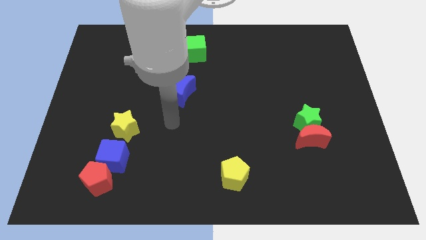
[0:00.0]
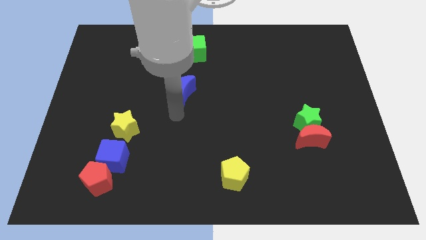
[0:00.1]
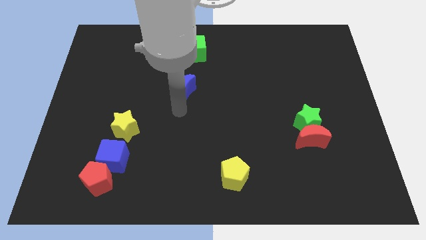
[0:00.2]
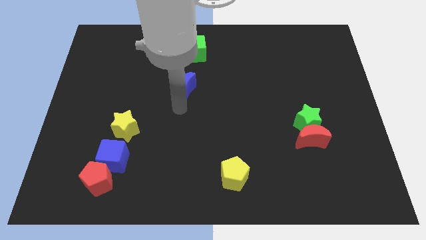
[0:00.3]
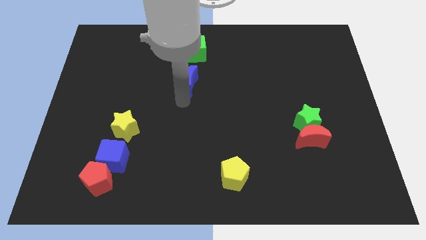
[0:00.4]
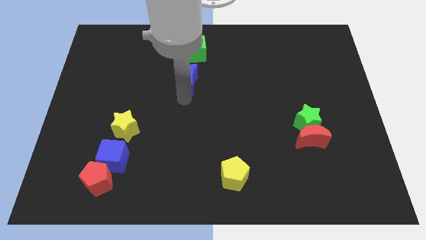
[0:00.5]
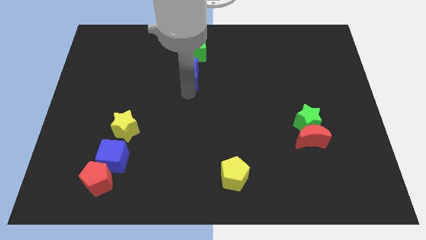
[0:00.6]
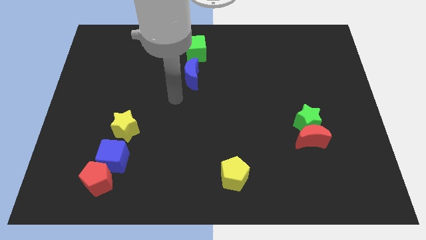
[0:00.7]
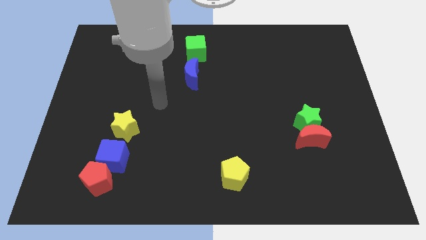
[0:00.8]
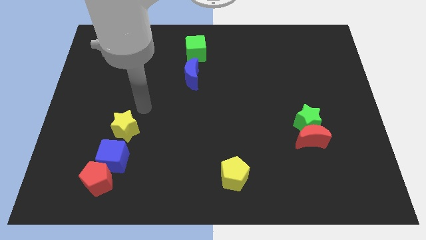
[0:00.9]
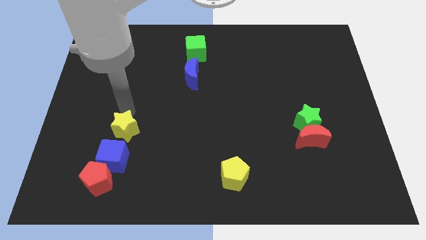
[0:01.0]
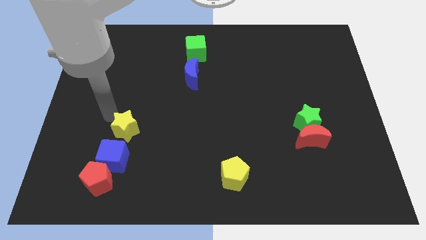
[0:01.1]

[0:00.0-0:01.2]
move the blue crescent into the green cube

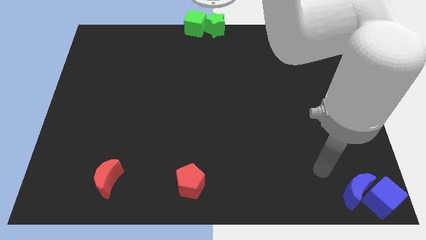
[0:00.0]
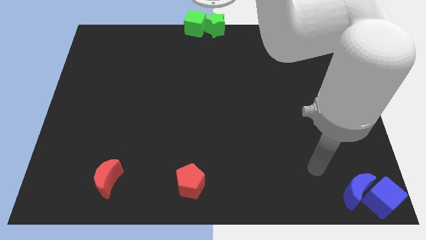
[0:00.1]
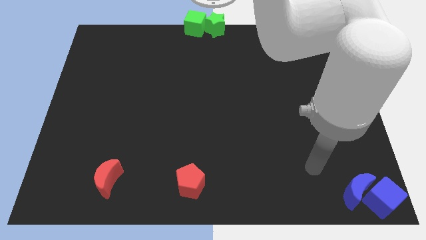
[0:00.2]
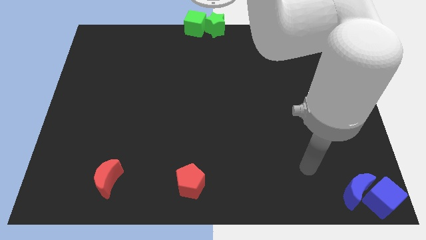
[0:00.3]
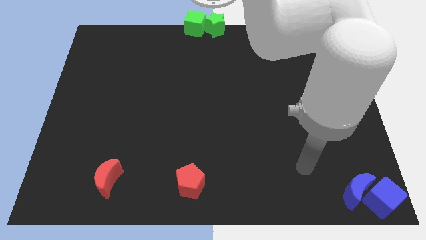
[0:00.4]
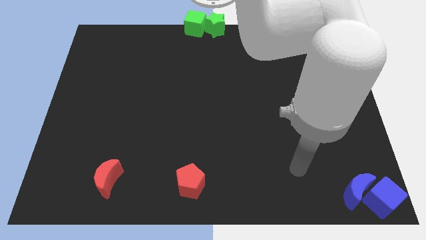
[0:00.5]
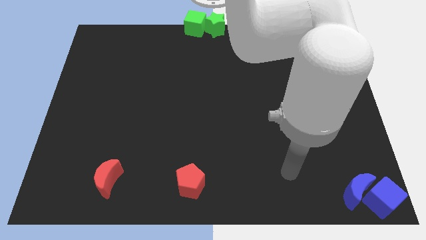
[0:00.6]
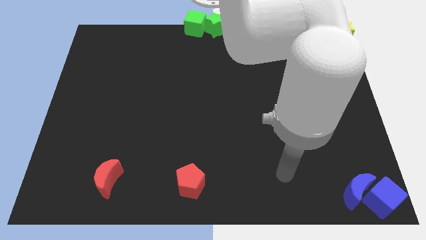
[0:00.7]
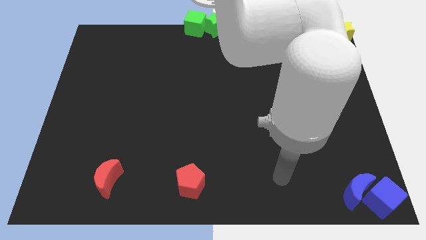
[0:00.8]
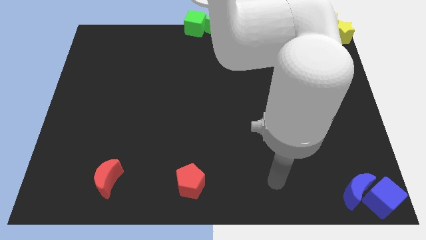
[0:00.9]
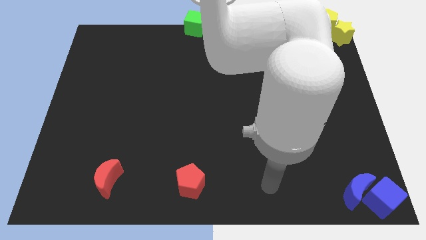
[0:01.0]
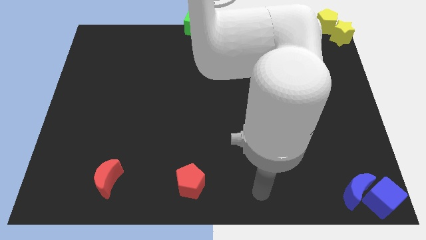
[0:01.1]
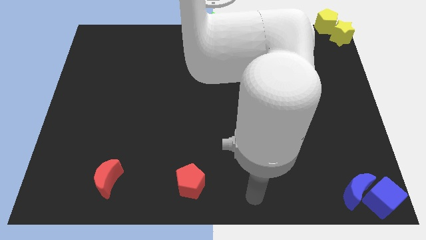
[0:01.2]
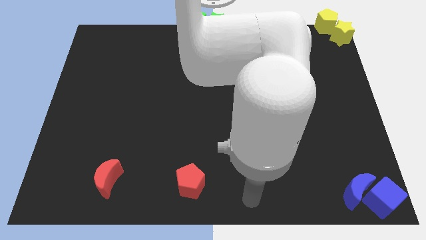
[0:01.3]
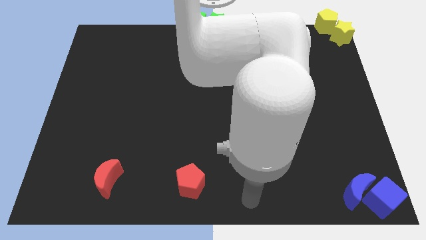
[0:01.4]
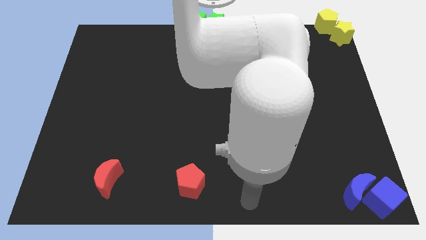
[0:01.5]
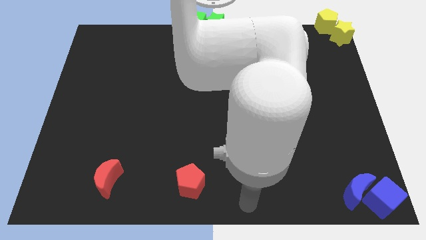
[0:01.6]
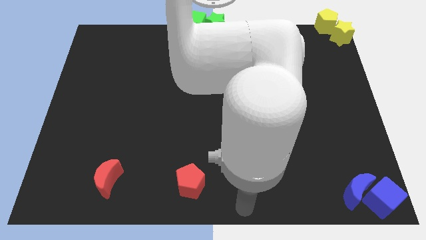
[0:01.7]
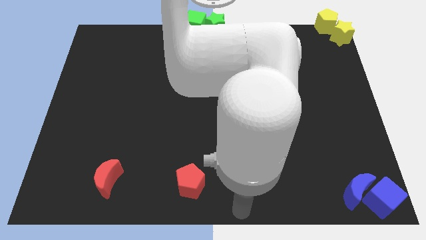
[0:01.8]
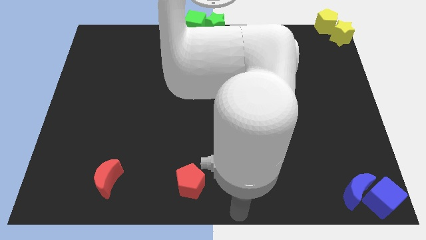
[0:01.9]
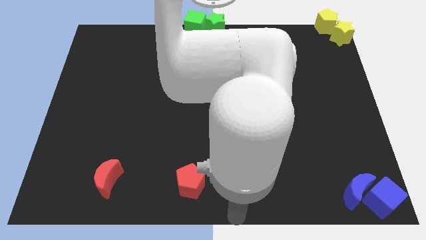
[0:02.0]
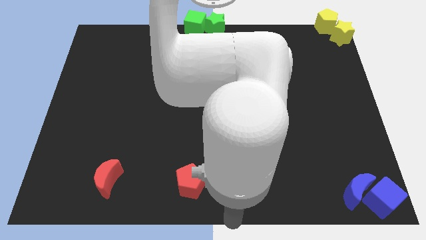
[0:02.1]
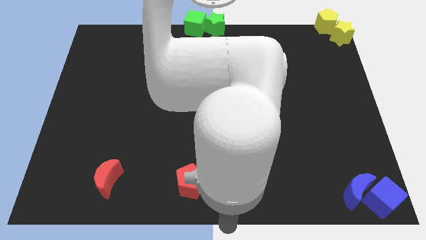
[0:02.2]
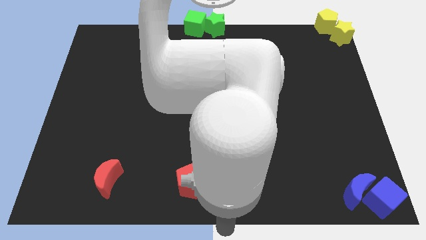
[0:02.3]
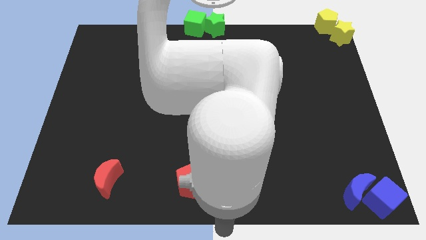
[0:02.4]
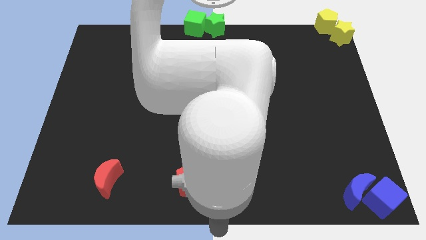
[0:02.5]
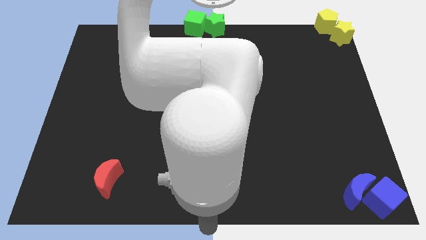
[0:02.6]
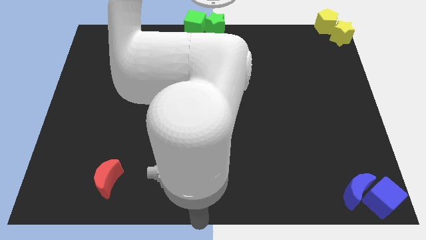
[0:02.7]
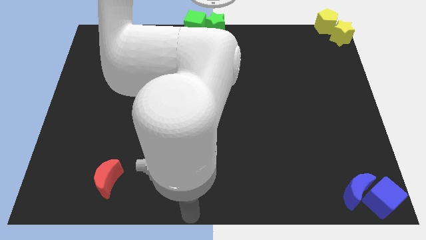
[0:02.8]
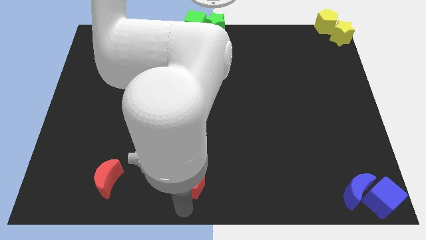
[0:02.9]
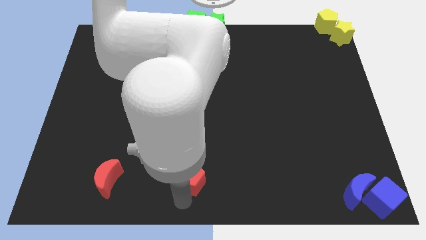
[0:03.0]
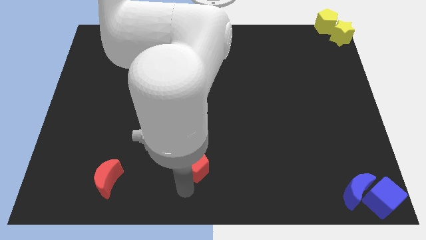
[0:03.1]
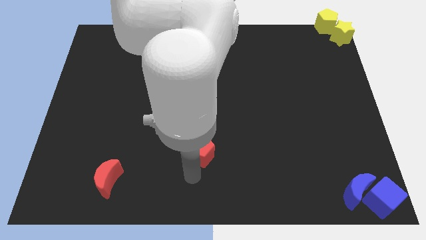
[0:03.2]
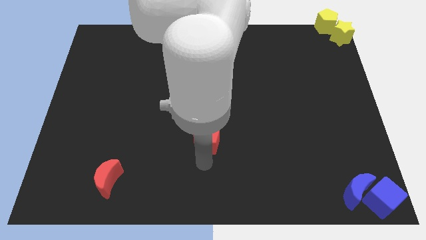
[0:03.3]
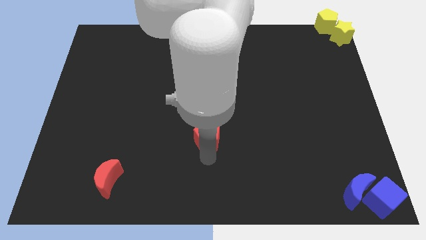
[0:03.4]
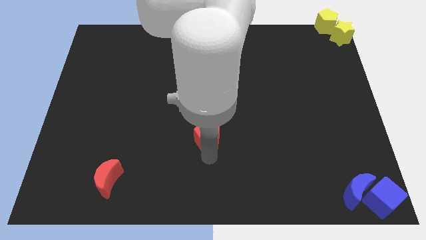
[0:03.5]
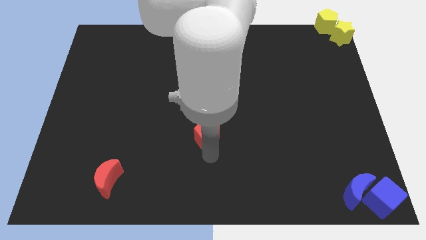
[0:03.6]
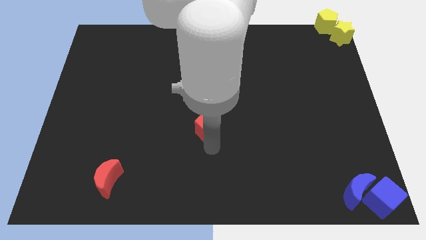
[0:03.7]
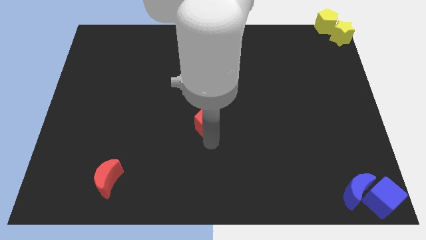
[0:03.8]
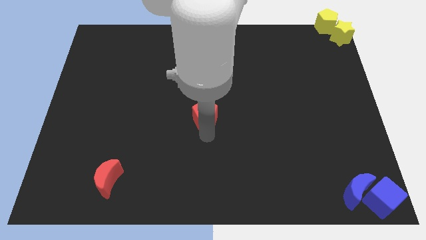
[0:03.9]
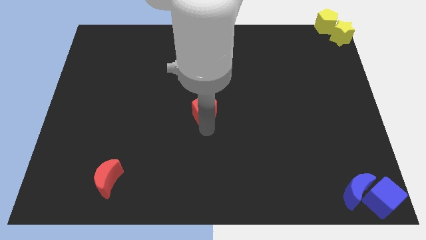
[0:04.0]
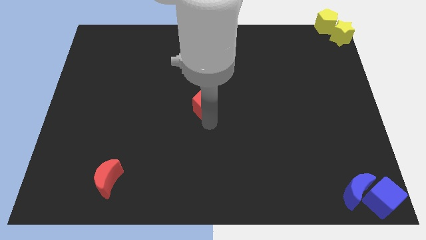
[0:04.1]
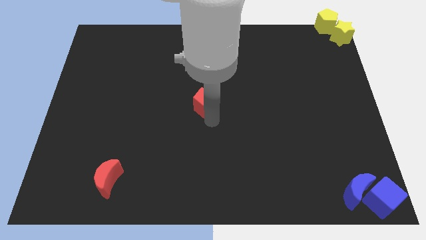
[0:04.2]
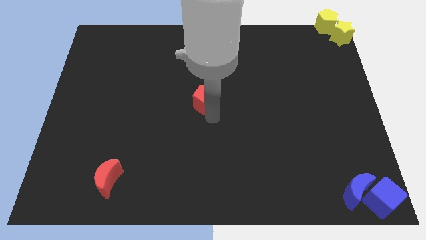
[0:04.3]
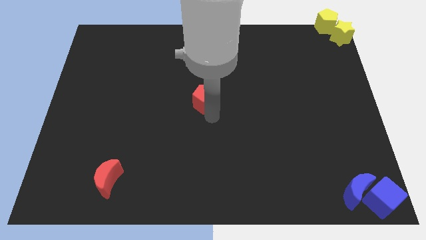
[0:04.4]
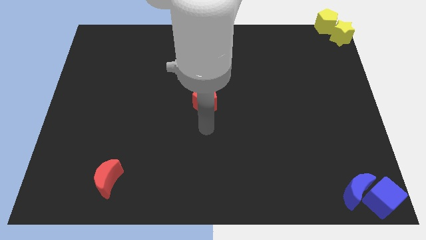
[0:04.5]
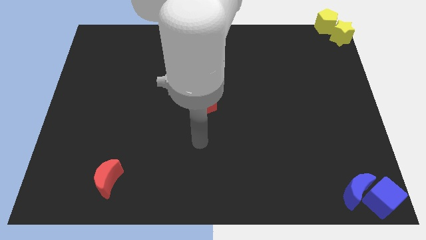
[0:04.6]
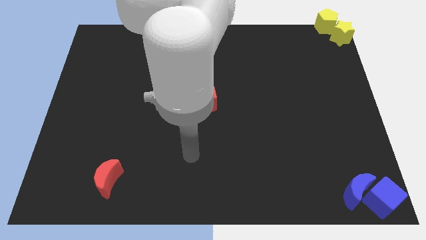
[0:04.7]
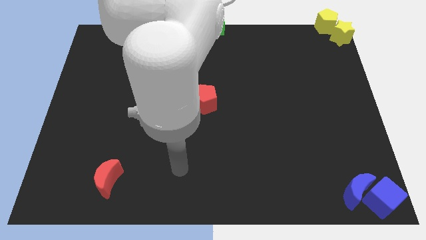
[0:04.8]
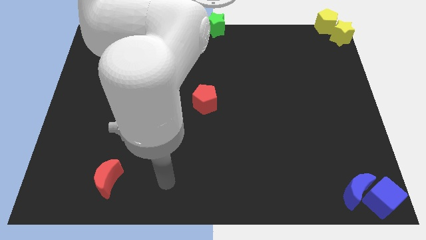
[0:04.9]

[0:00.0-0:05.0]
move the red pentagon to the center of the board

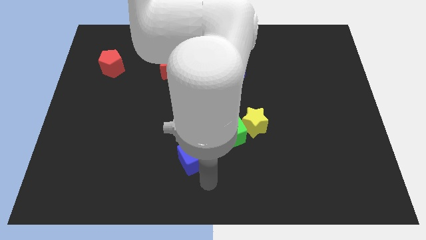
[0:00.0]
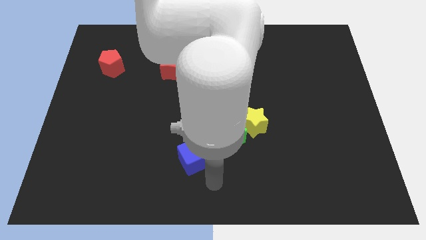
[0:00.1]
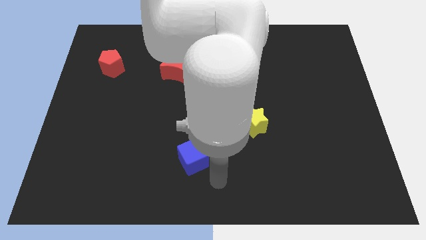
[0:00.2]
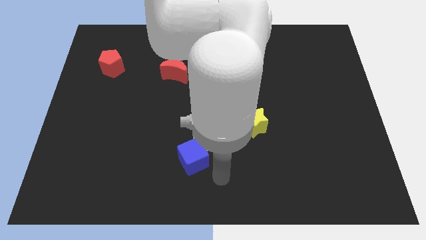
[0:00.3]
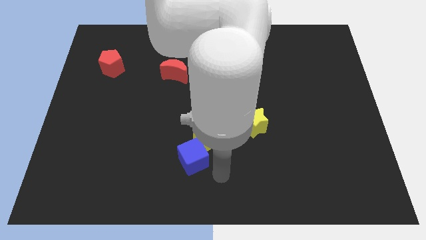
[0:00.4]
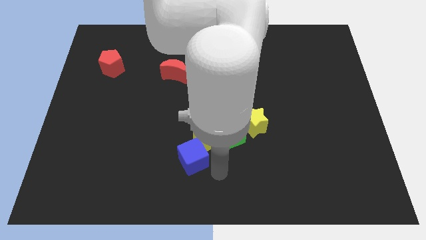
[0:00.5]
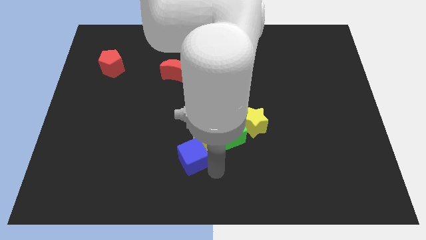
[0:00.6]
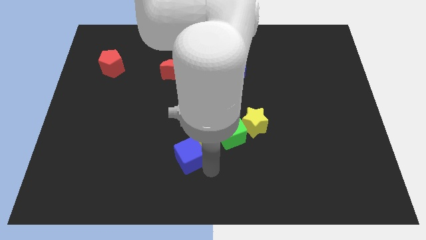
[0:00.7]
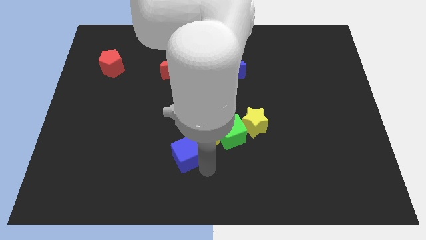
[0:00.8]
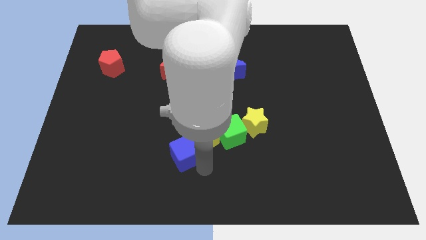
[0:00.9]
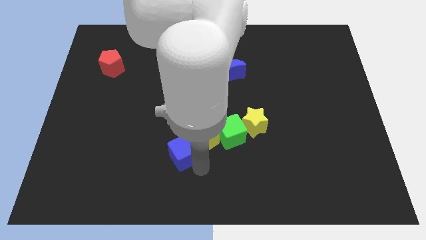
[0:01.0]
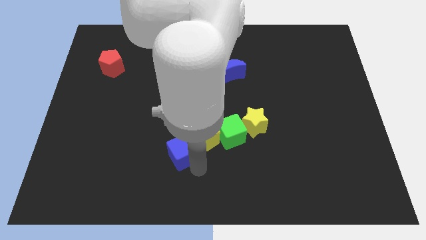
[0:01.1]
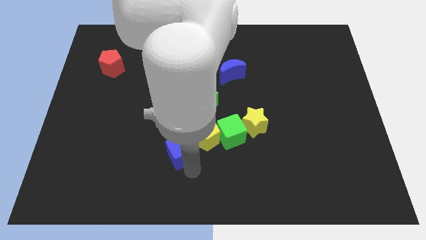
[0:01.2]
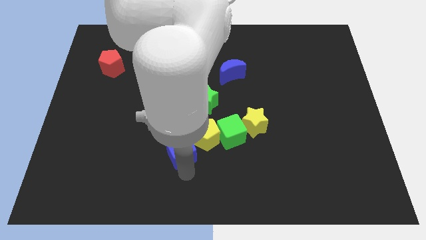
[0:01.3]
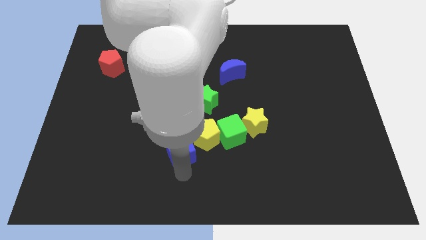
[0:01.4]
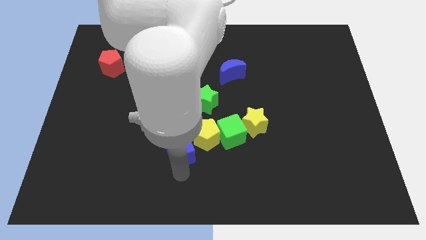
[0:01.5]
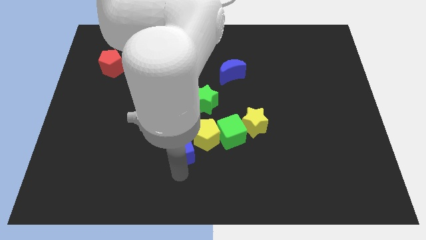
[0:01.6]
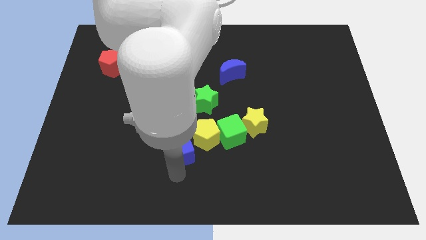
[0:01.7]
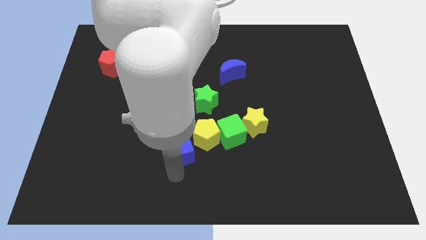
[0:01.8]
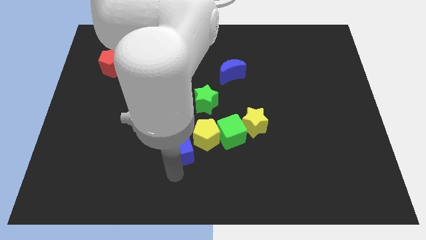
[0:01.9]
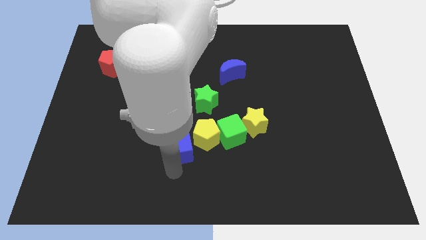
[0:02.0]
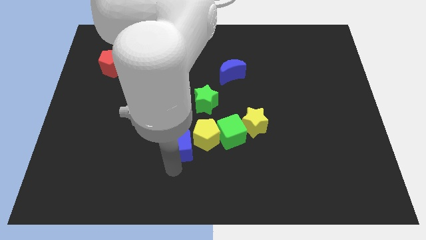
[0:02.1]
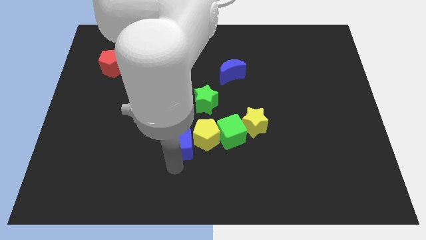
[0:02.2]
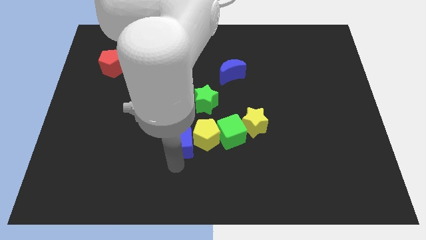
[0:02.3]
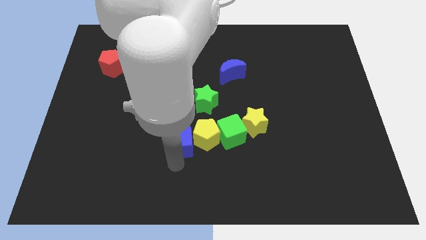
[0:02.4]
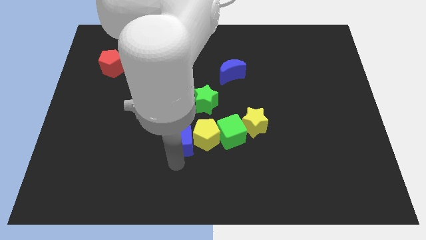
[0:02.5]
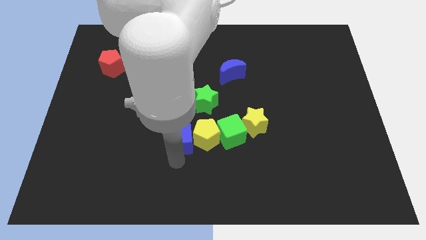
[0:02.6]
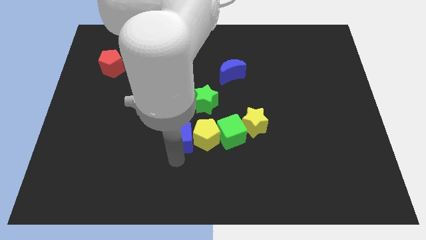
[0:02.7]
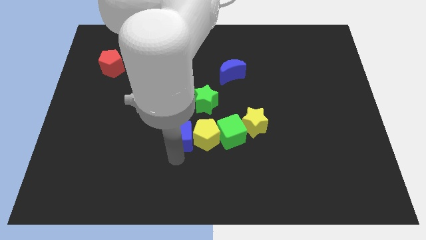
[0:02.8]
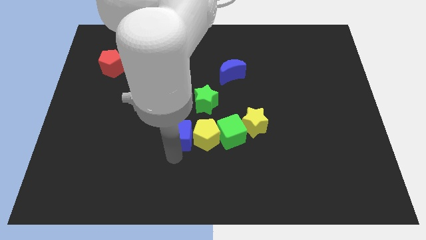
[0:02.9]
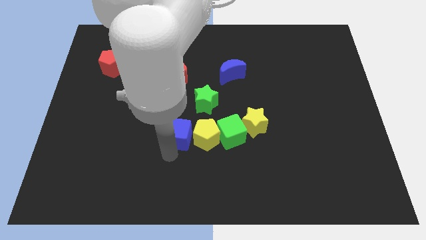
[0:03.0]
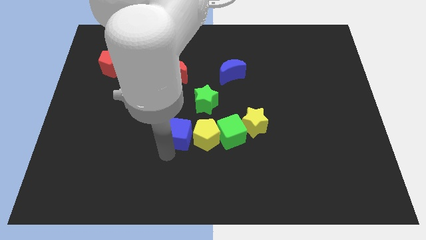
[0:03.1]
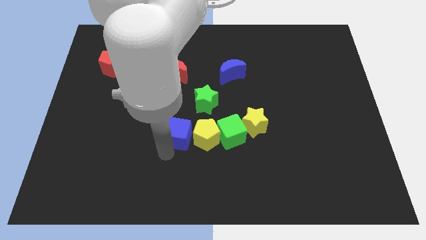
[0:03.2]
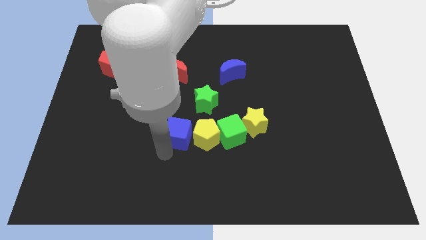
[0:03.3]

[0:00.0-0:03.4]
place the blue cube to the left of the yellow pentagon
